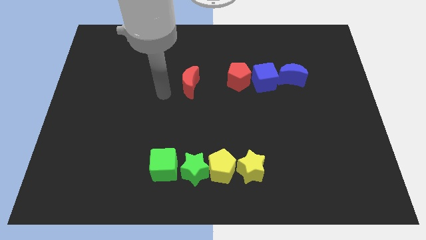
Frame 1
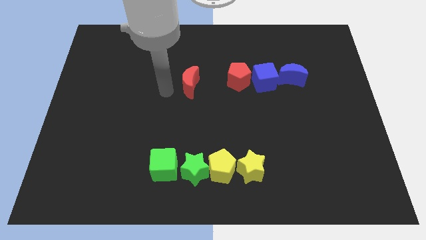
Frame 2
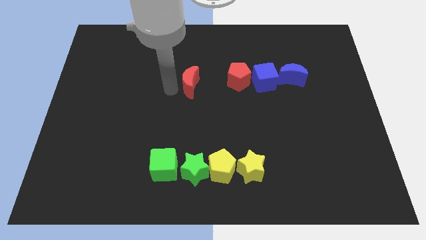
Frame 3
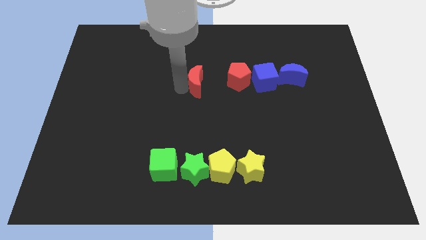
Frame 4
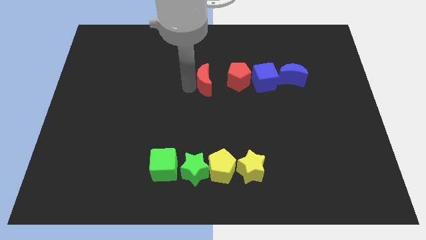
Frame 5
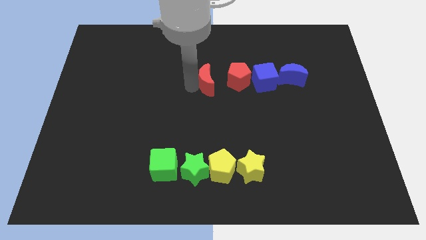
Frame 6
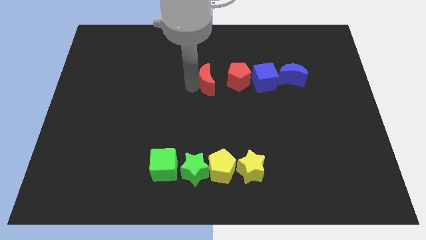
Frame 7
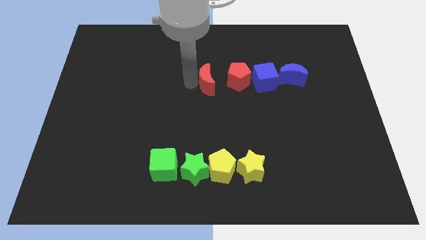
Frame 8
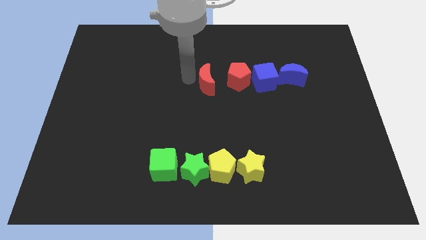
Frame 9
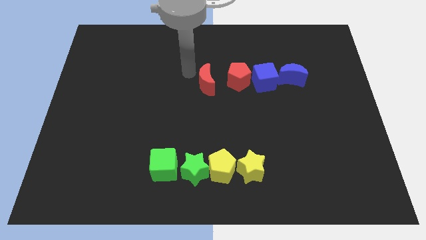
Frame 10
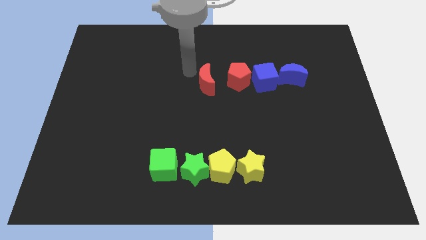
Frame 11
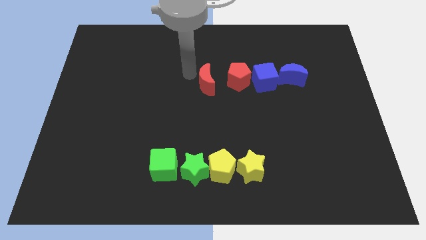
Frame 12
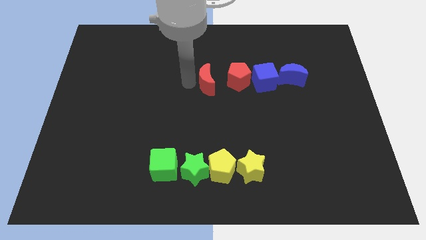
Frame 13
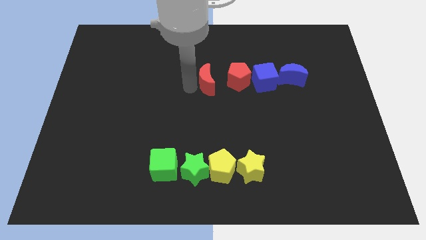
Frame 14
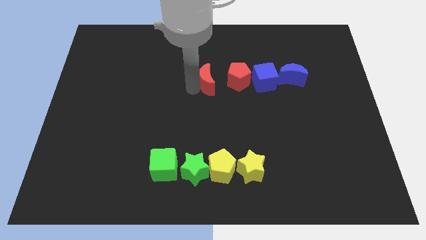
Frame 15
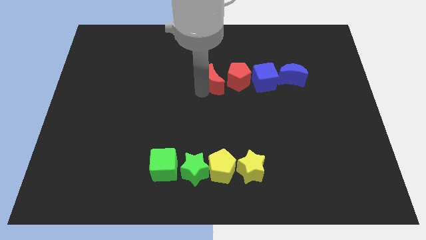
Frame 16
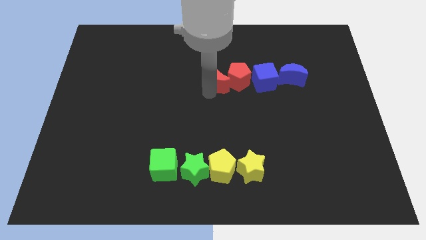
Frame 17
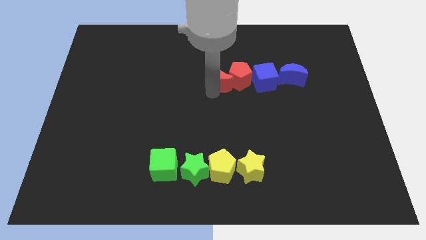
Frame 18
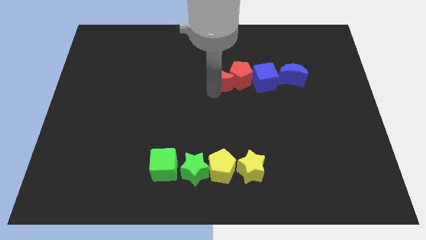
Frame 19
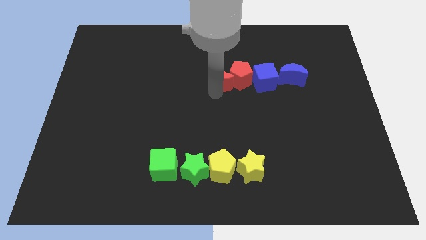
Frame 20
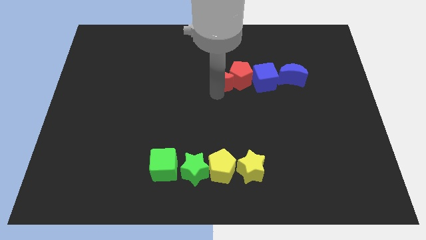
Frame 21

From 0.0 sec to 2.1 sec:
push the red moon into the red pentagon

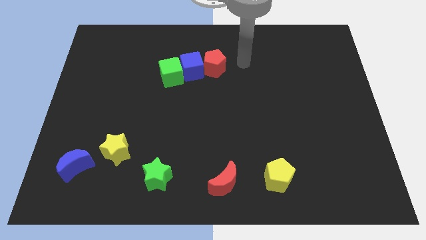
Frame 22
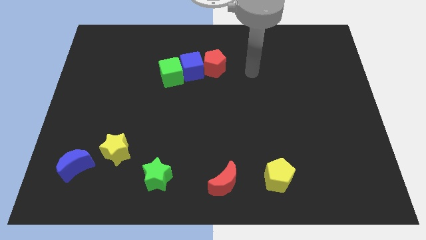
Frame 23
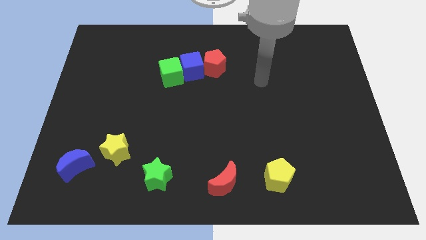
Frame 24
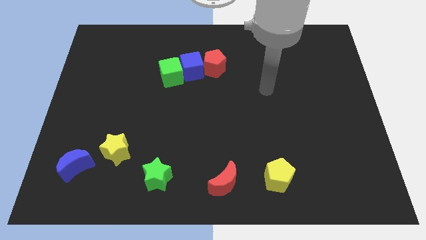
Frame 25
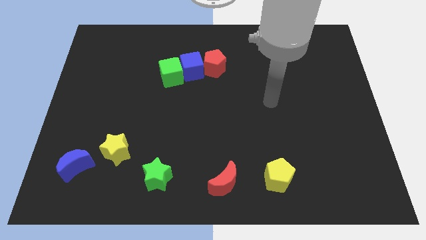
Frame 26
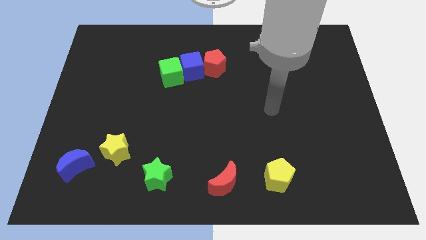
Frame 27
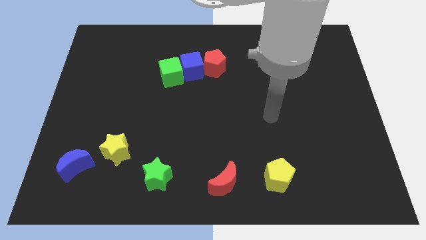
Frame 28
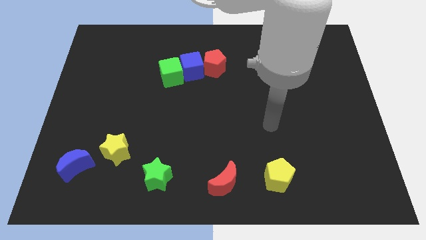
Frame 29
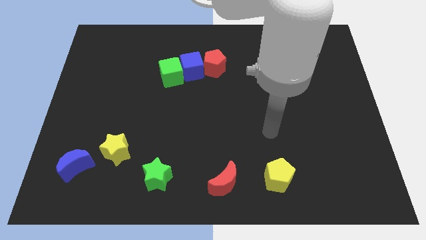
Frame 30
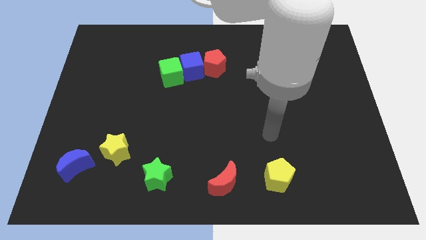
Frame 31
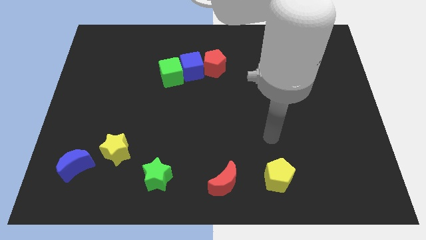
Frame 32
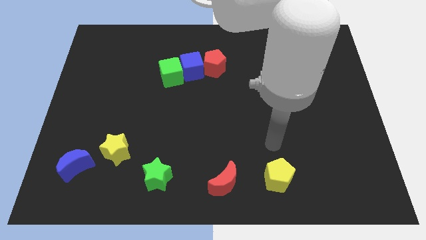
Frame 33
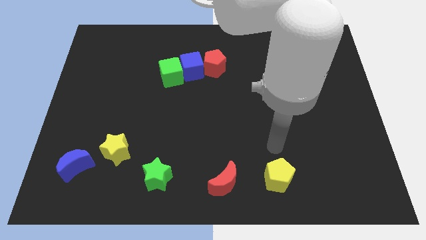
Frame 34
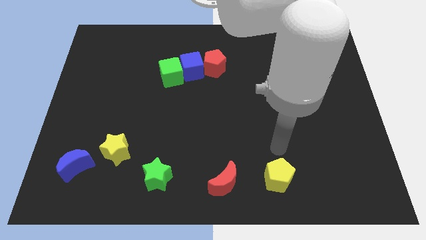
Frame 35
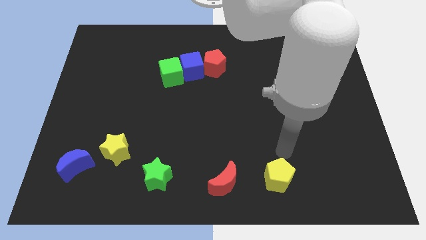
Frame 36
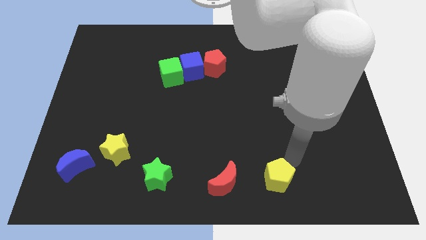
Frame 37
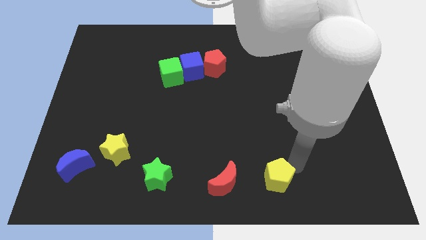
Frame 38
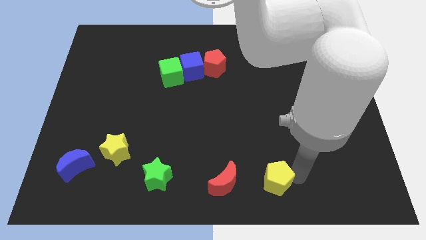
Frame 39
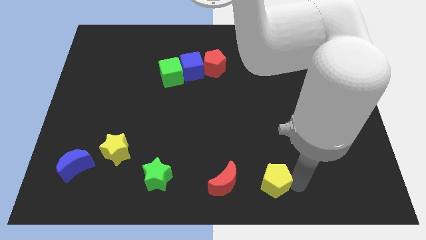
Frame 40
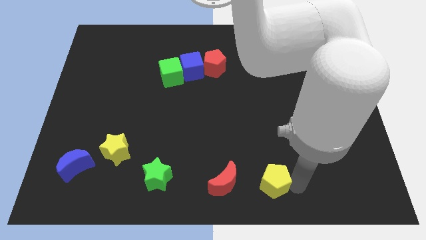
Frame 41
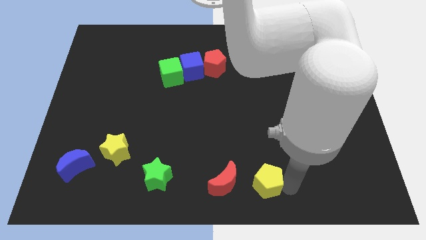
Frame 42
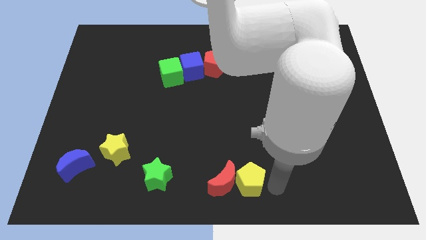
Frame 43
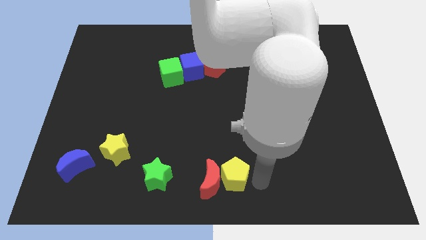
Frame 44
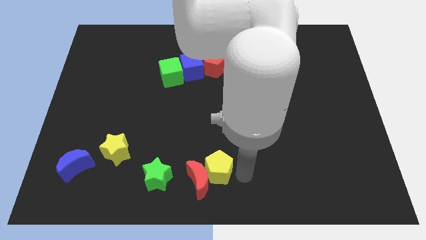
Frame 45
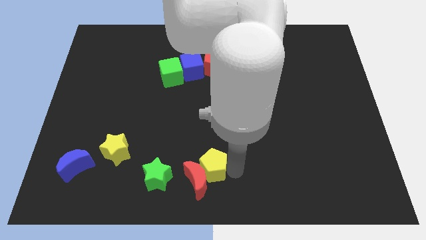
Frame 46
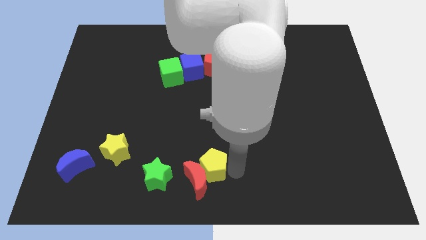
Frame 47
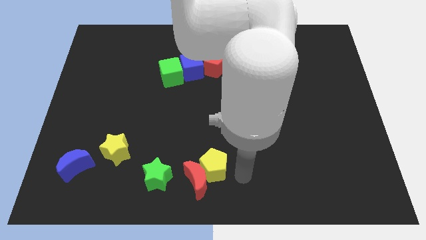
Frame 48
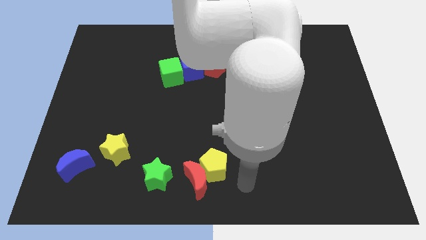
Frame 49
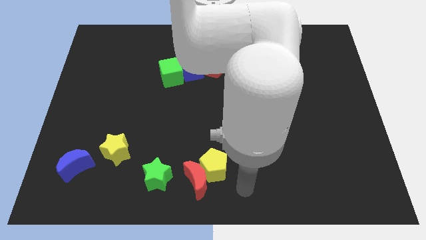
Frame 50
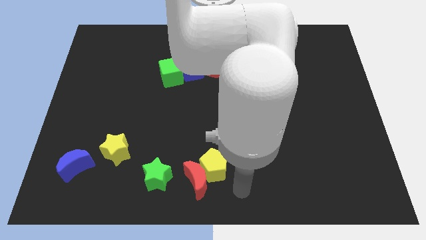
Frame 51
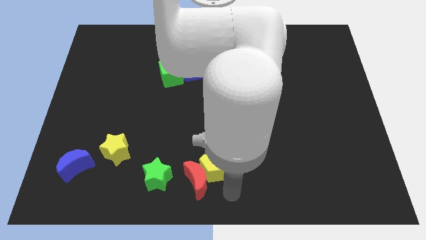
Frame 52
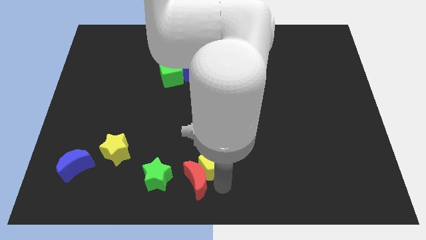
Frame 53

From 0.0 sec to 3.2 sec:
slide the red moon and yellow pentagon to the bottom center of the board

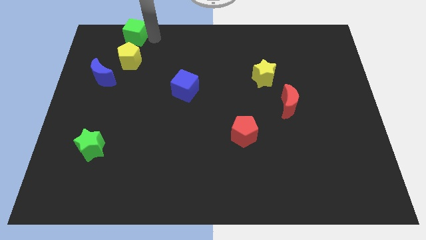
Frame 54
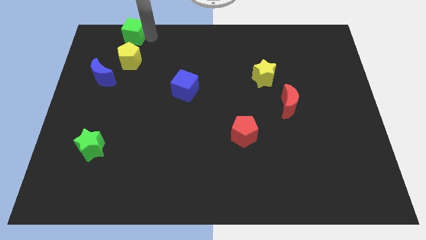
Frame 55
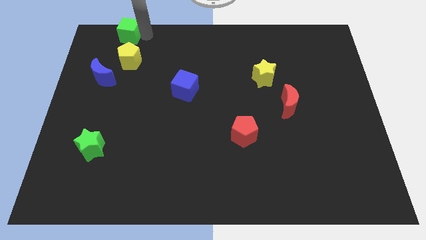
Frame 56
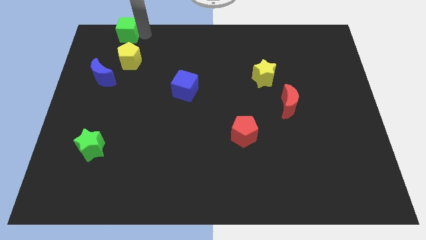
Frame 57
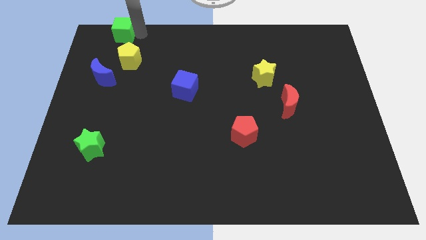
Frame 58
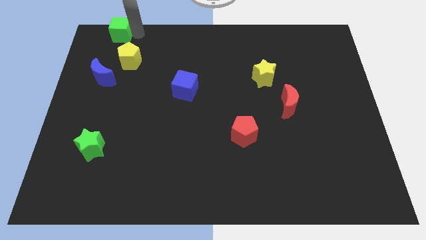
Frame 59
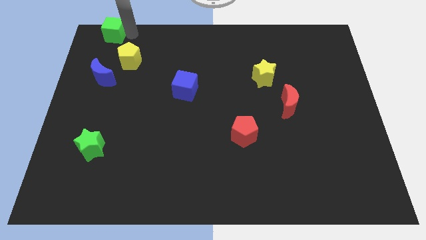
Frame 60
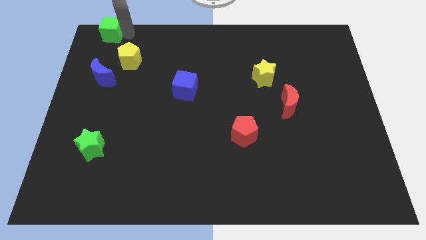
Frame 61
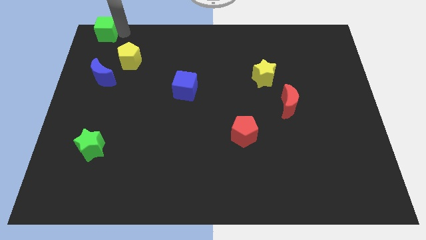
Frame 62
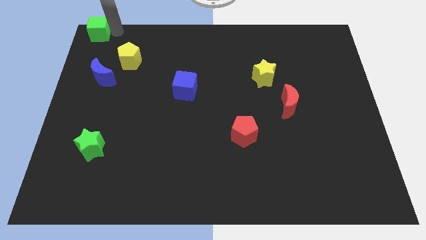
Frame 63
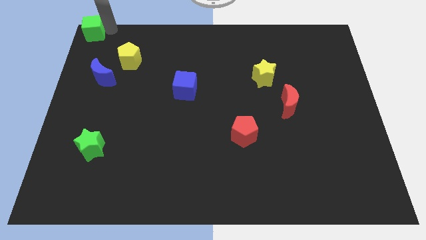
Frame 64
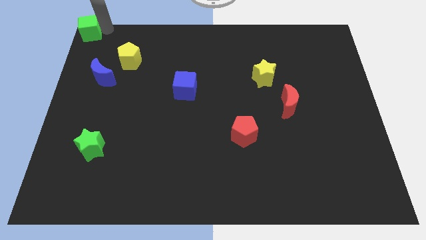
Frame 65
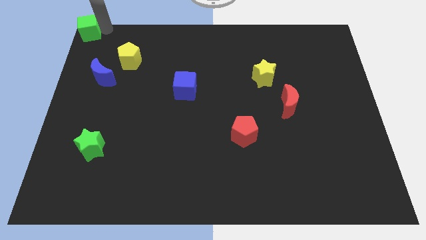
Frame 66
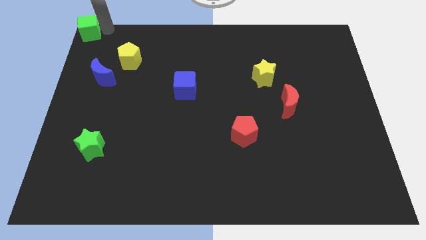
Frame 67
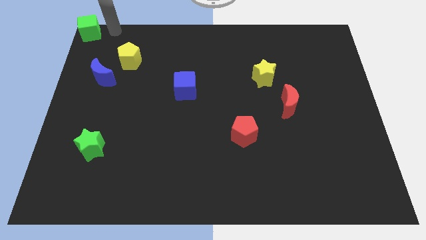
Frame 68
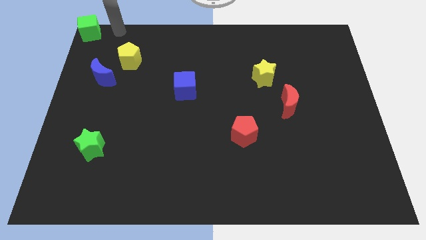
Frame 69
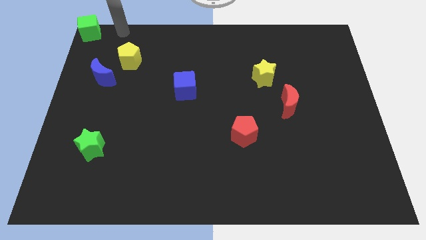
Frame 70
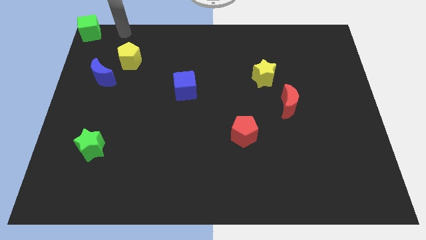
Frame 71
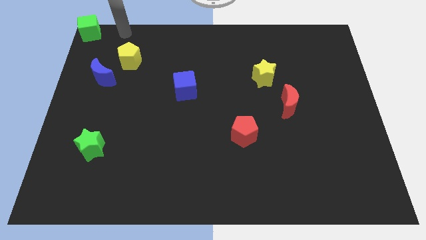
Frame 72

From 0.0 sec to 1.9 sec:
move the green cube towards the top left corner of the board

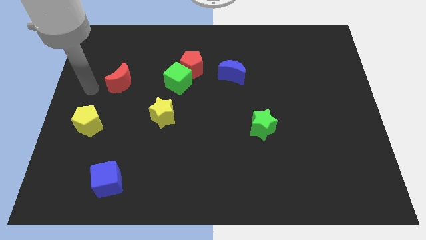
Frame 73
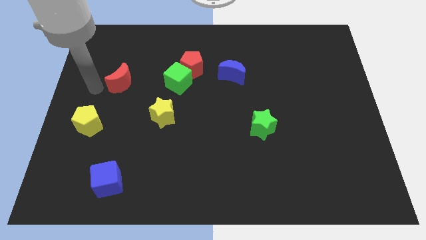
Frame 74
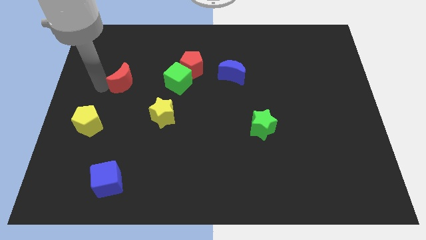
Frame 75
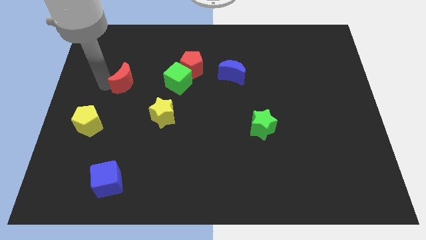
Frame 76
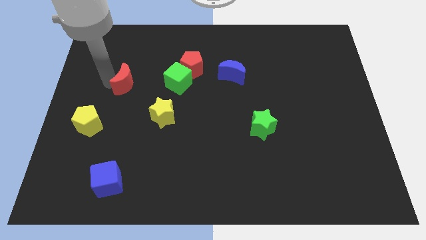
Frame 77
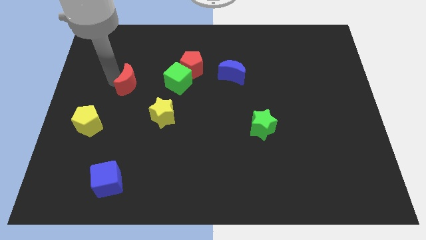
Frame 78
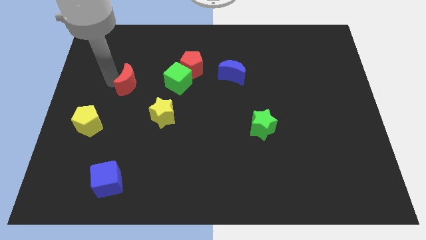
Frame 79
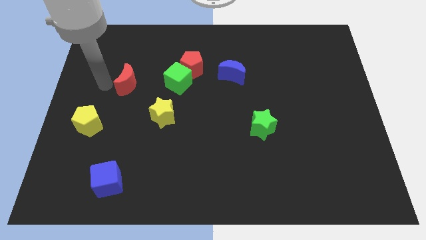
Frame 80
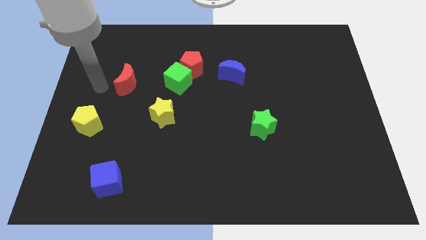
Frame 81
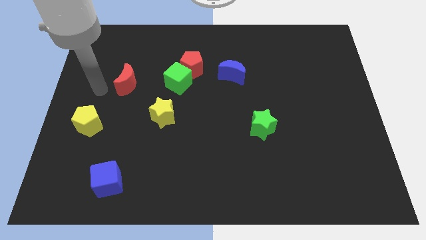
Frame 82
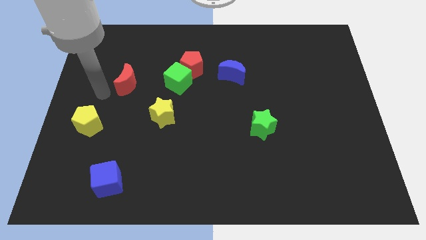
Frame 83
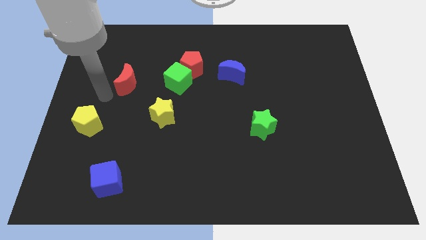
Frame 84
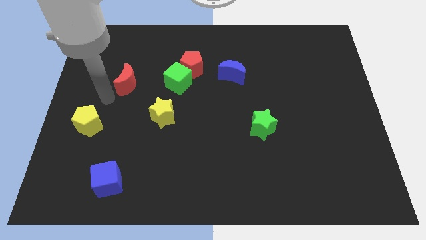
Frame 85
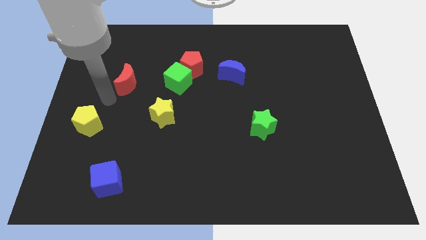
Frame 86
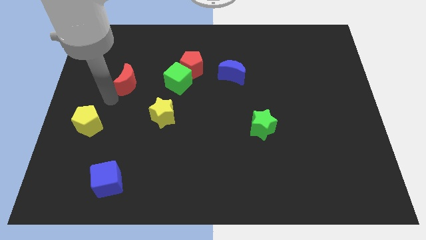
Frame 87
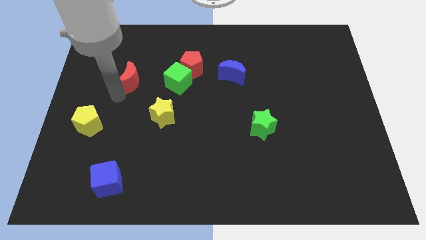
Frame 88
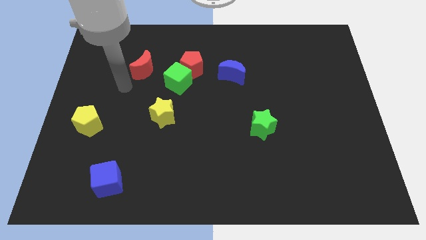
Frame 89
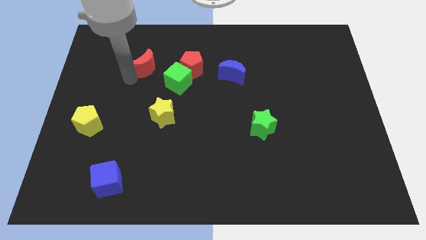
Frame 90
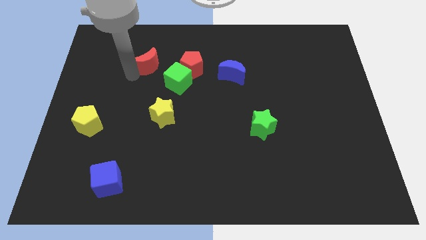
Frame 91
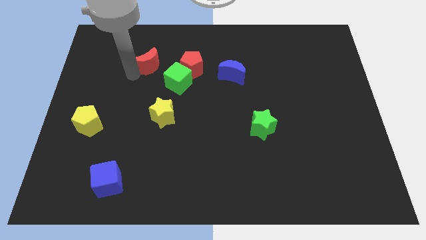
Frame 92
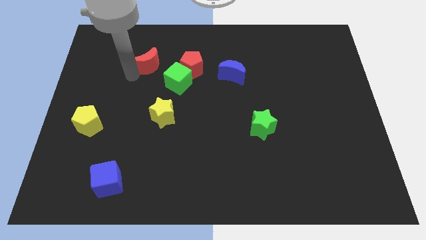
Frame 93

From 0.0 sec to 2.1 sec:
move the red moon diagonal left of green cube
